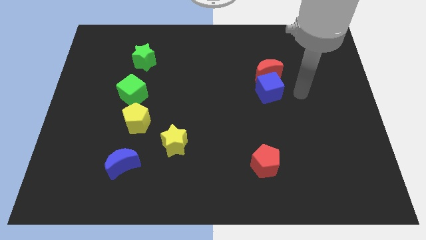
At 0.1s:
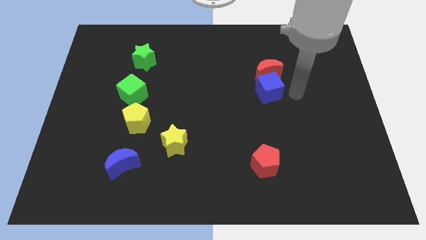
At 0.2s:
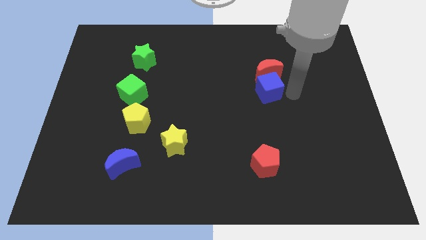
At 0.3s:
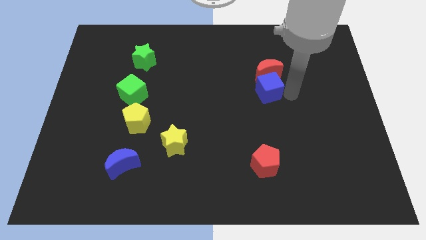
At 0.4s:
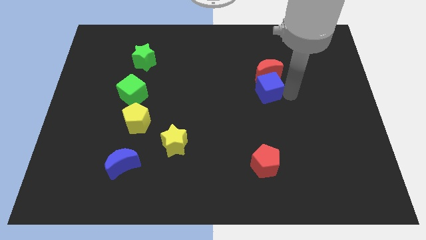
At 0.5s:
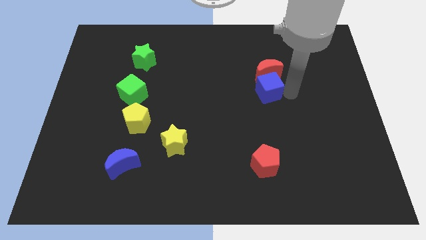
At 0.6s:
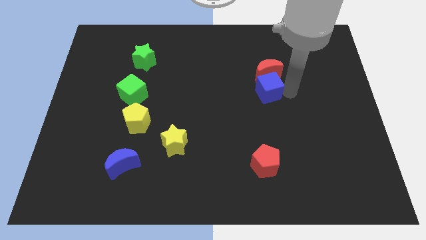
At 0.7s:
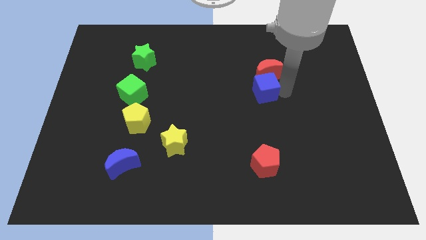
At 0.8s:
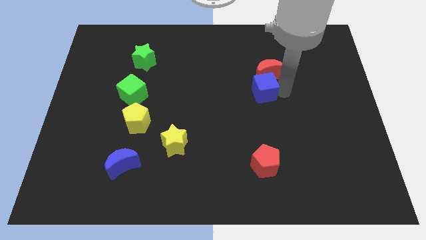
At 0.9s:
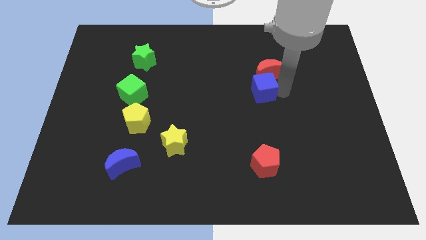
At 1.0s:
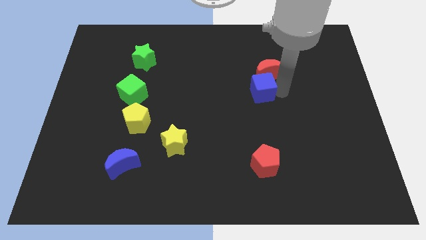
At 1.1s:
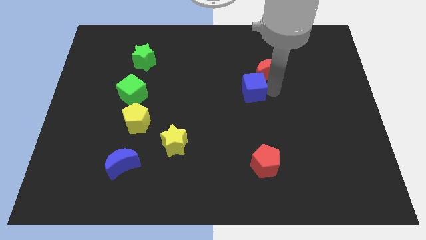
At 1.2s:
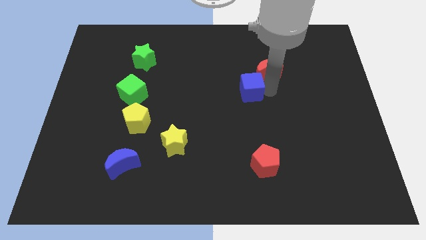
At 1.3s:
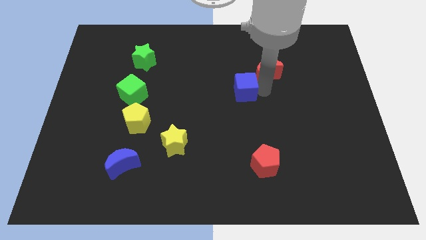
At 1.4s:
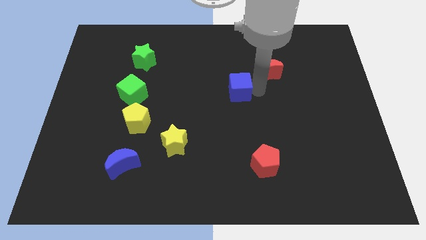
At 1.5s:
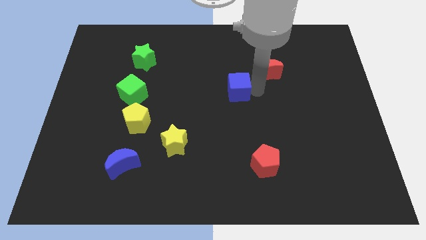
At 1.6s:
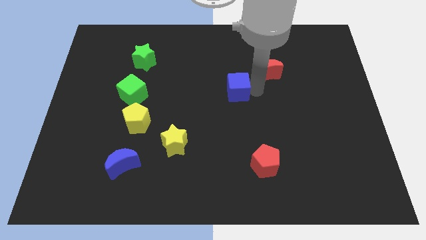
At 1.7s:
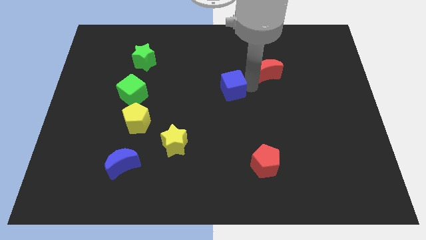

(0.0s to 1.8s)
separate the blue cube from the red moon

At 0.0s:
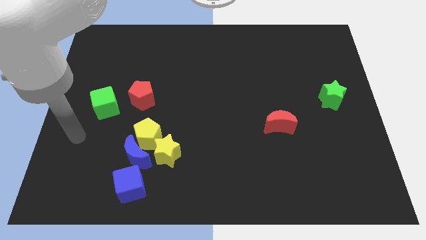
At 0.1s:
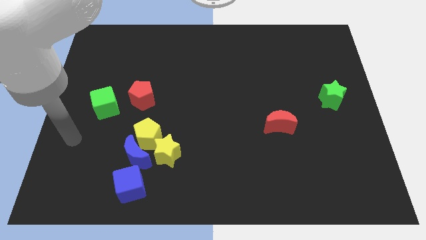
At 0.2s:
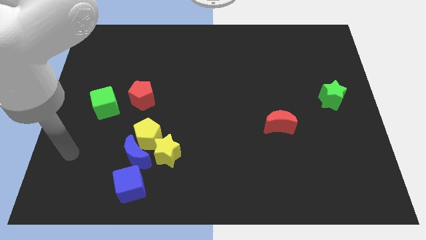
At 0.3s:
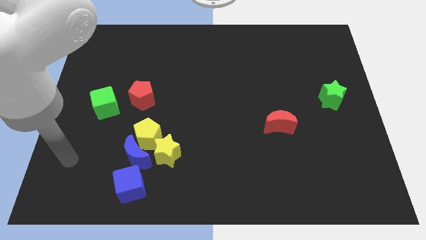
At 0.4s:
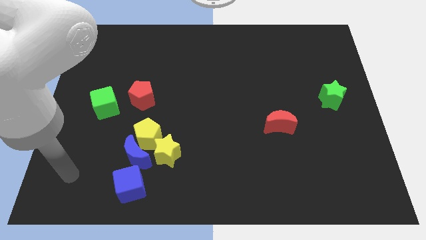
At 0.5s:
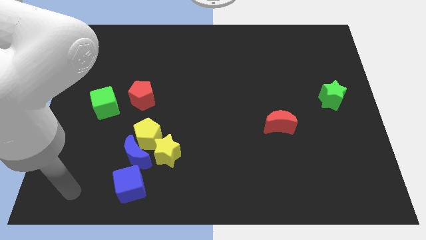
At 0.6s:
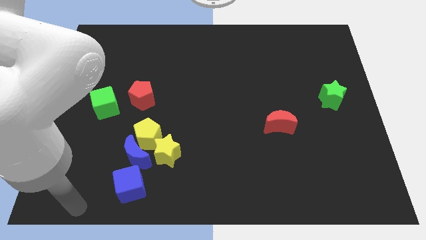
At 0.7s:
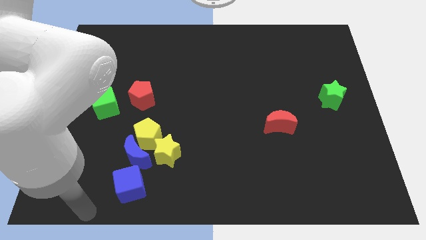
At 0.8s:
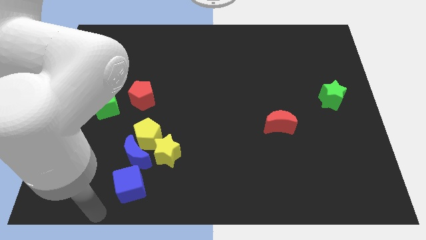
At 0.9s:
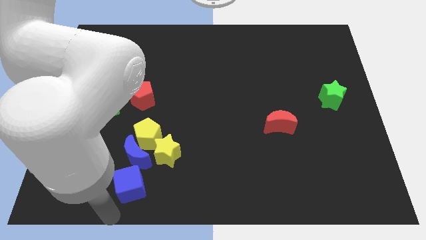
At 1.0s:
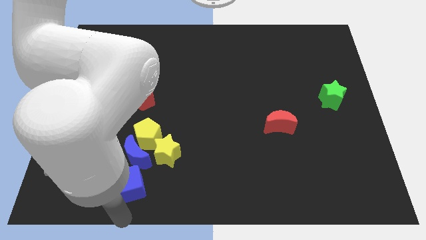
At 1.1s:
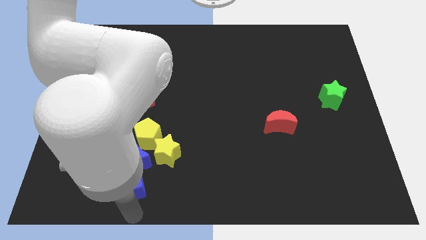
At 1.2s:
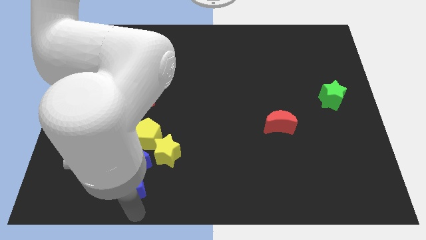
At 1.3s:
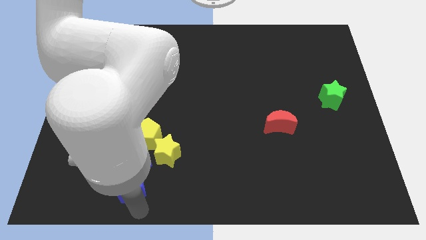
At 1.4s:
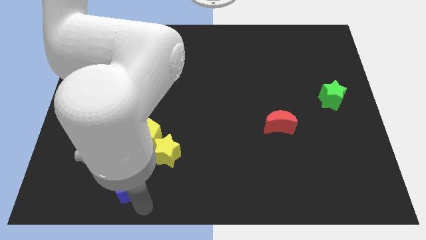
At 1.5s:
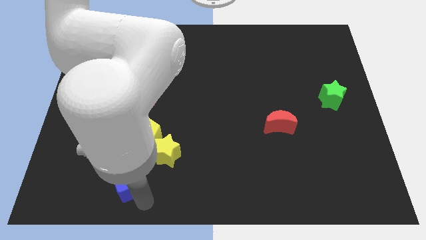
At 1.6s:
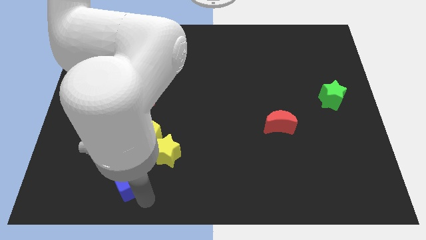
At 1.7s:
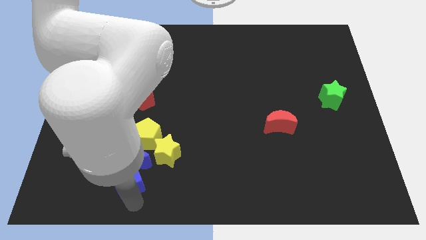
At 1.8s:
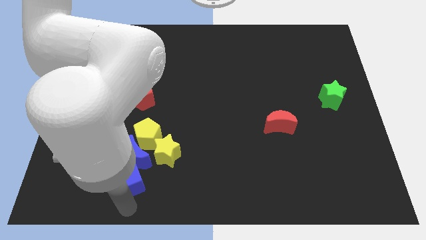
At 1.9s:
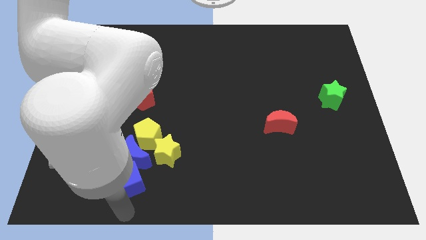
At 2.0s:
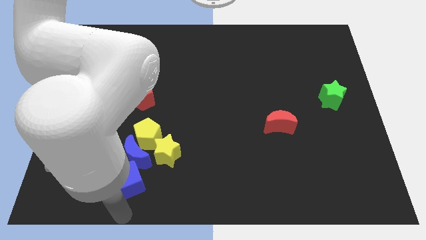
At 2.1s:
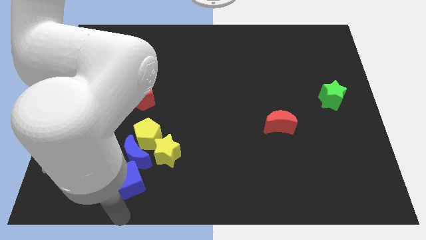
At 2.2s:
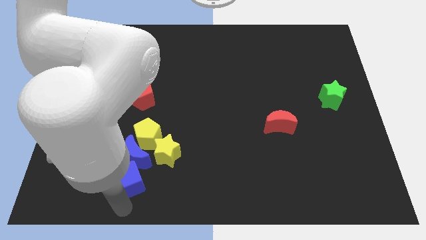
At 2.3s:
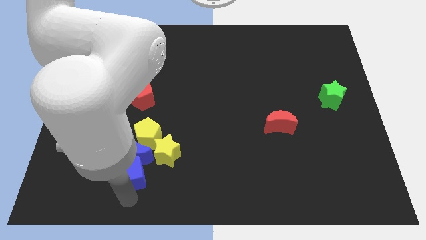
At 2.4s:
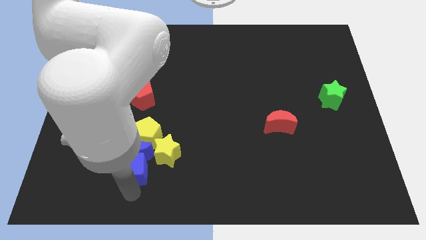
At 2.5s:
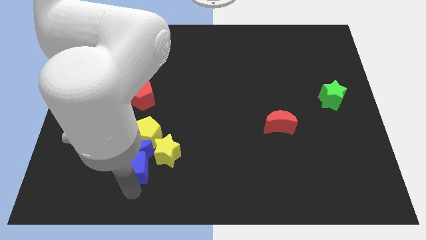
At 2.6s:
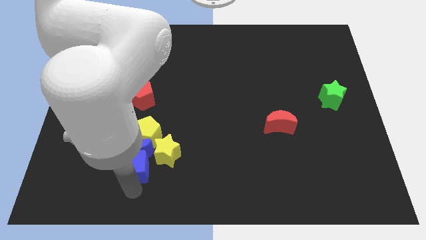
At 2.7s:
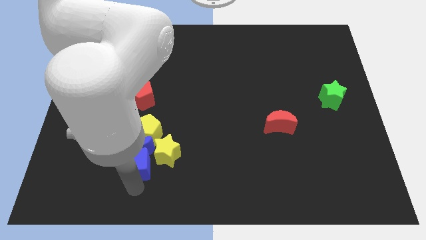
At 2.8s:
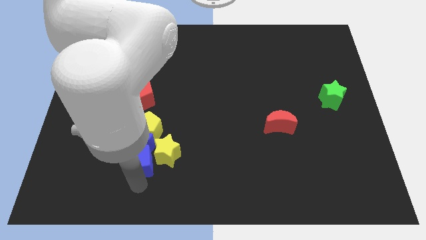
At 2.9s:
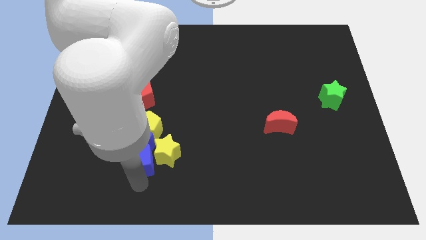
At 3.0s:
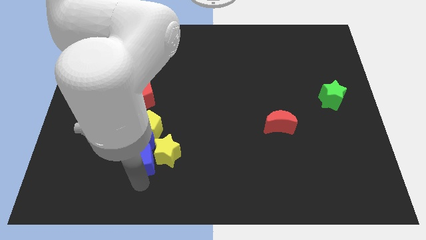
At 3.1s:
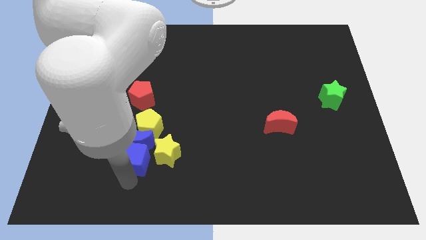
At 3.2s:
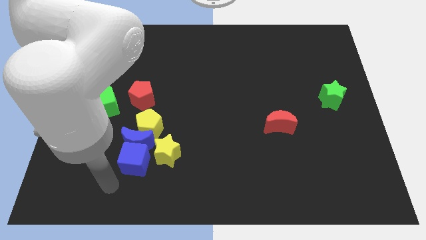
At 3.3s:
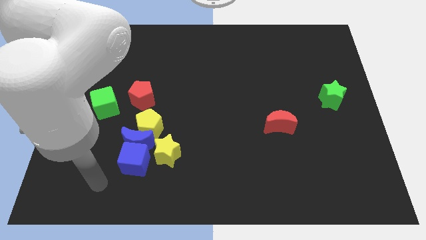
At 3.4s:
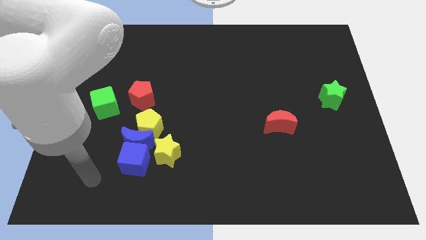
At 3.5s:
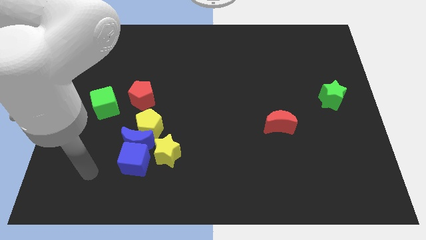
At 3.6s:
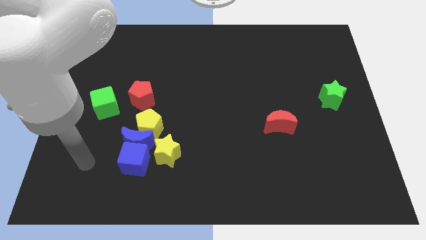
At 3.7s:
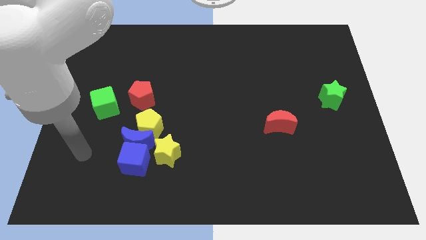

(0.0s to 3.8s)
push the blue cube into the blue moon

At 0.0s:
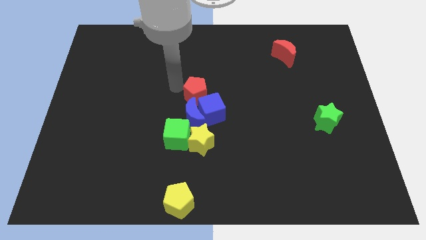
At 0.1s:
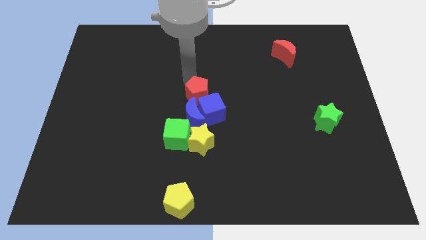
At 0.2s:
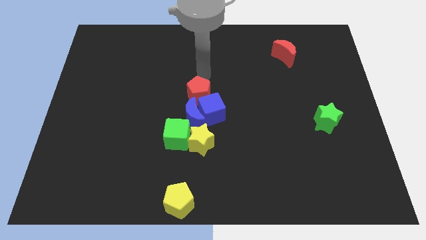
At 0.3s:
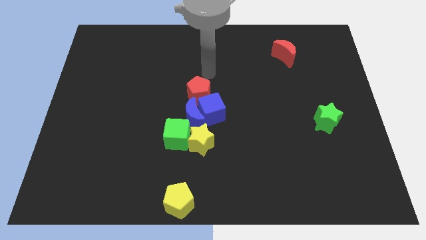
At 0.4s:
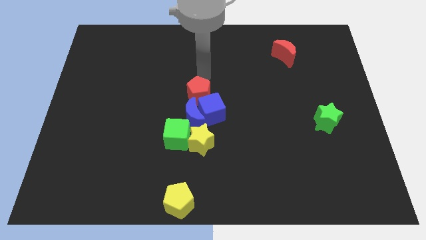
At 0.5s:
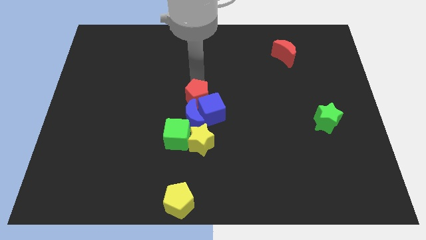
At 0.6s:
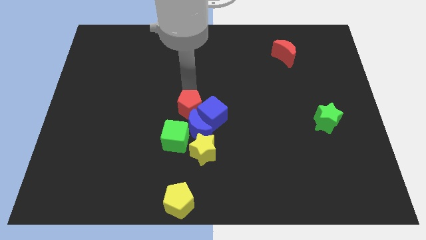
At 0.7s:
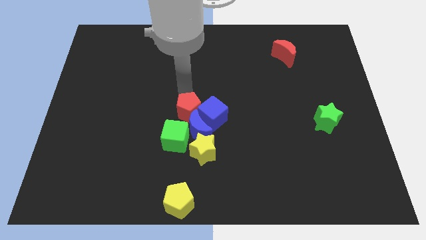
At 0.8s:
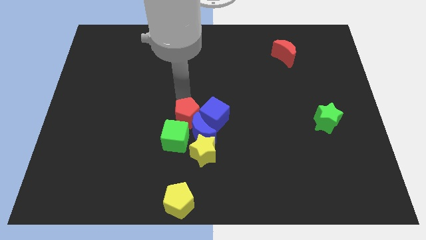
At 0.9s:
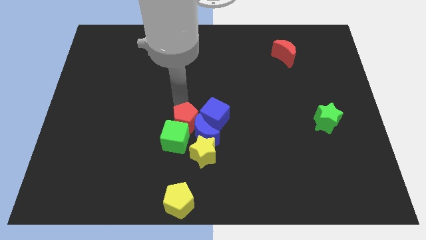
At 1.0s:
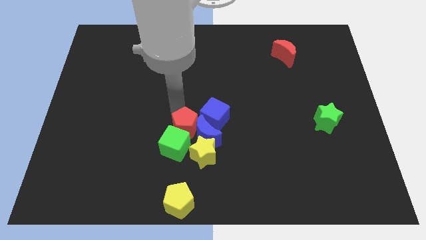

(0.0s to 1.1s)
push the red pentagon into the group of blocks

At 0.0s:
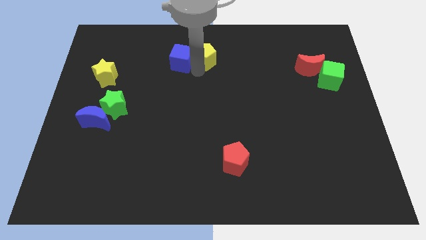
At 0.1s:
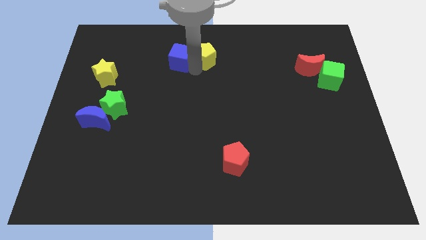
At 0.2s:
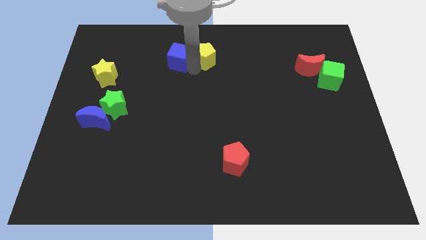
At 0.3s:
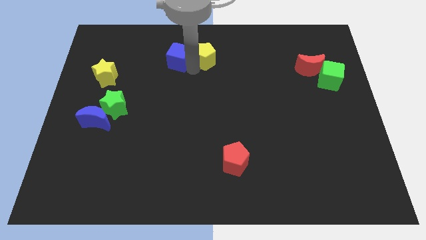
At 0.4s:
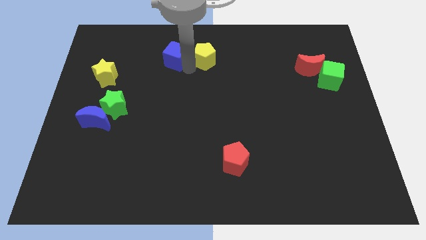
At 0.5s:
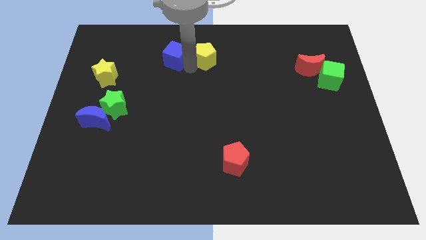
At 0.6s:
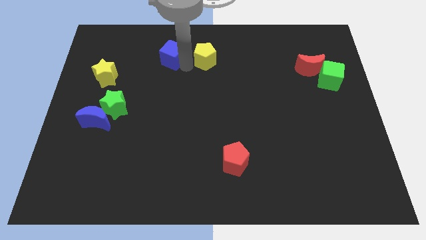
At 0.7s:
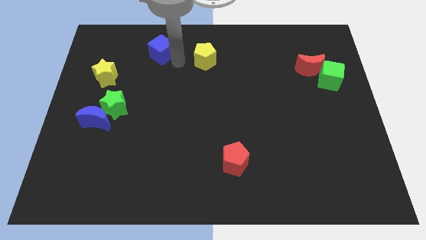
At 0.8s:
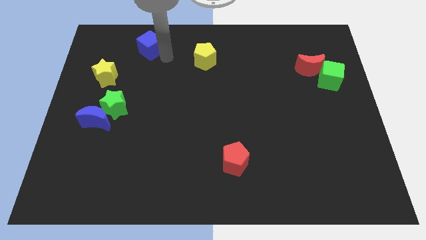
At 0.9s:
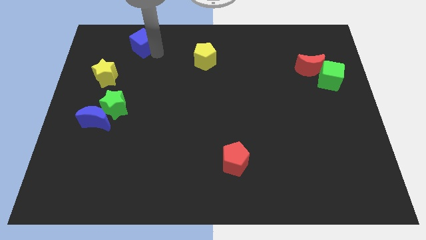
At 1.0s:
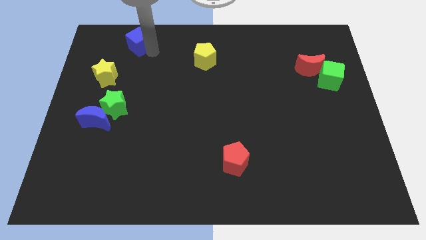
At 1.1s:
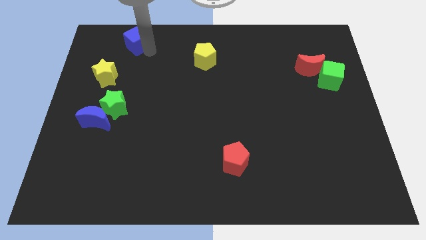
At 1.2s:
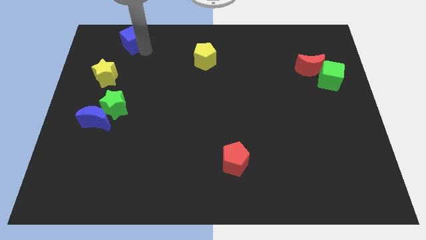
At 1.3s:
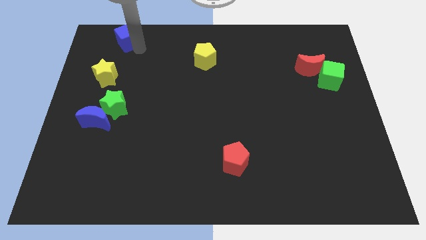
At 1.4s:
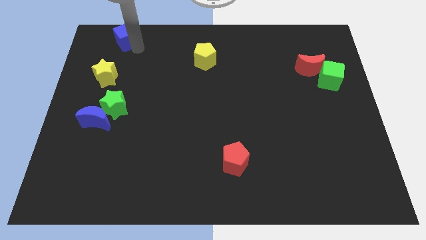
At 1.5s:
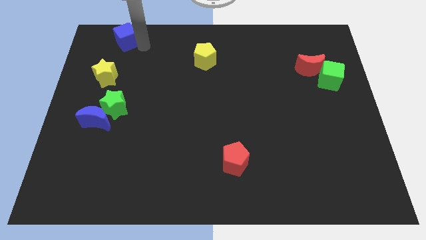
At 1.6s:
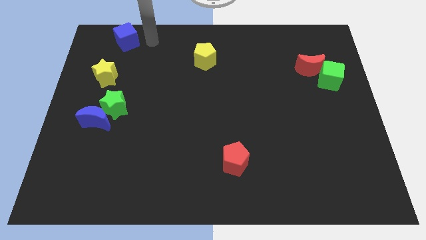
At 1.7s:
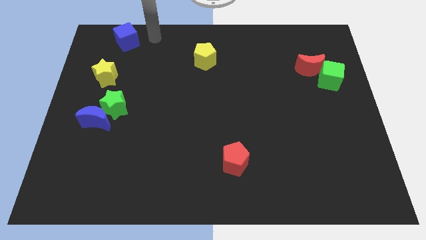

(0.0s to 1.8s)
push the blue cube near to the top left corner

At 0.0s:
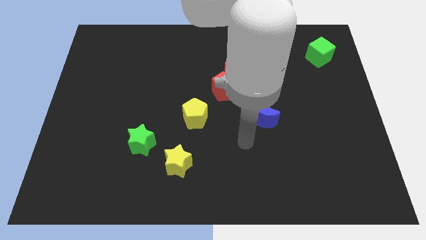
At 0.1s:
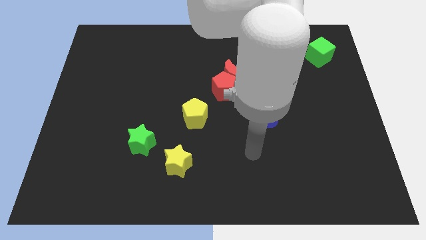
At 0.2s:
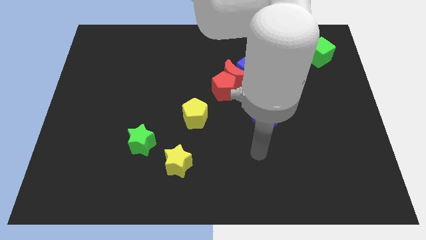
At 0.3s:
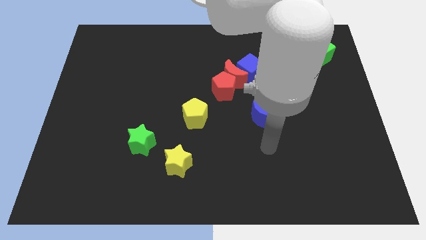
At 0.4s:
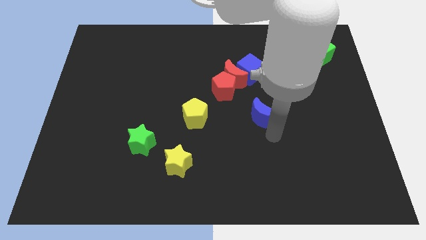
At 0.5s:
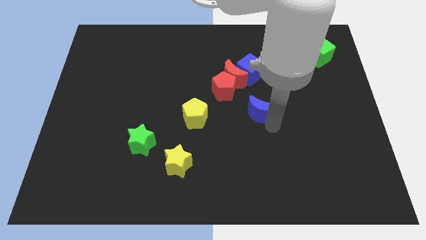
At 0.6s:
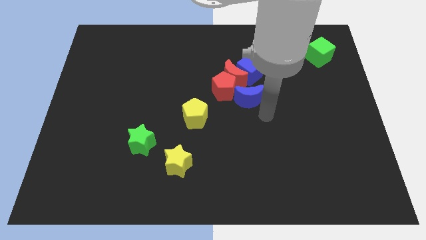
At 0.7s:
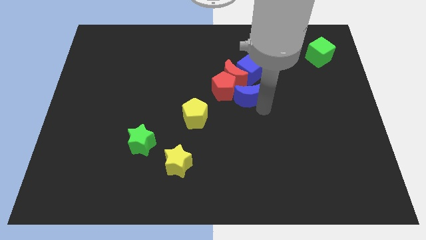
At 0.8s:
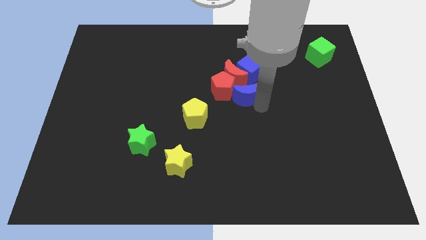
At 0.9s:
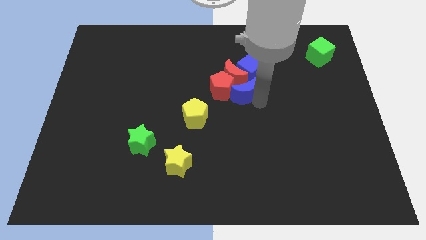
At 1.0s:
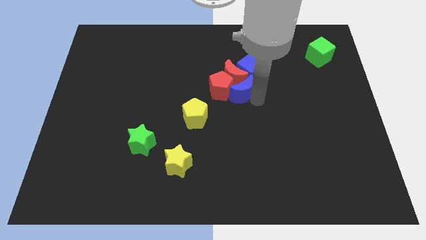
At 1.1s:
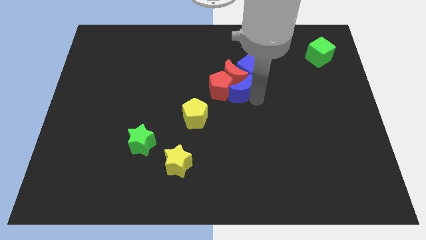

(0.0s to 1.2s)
slide the blue moon into the red blocks
